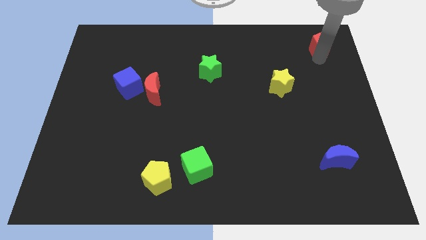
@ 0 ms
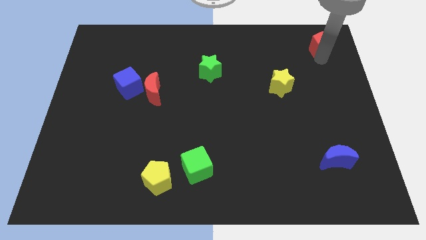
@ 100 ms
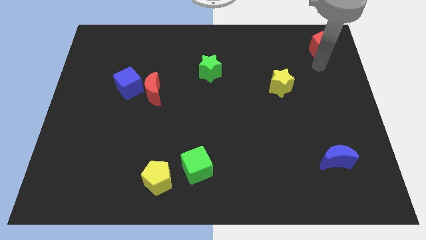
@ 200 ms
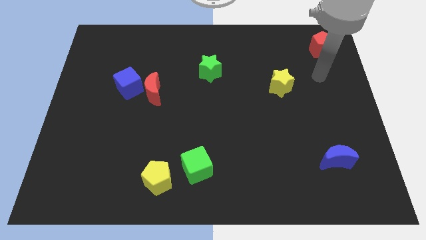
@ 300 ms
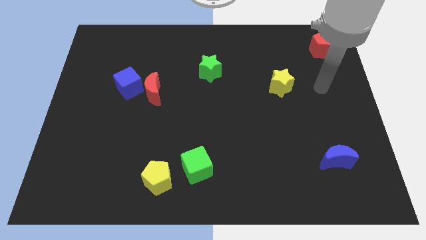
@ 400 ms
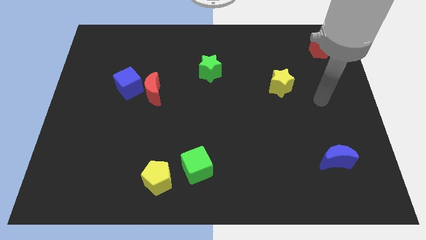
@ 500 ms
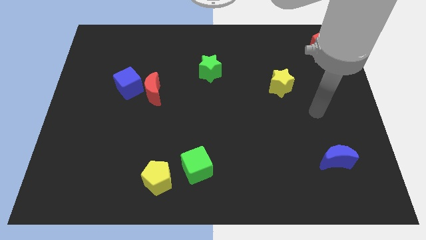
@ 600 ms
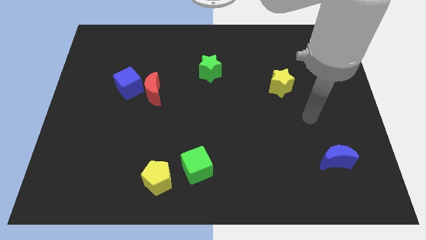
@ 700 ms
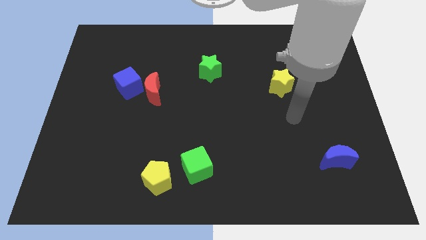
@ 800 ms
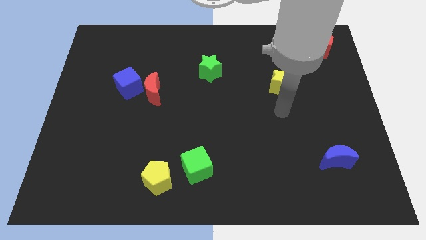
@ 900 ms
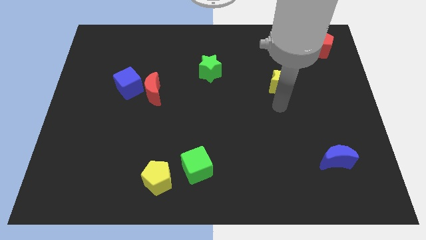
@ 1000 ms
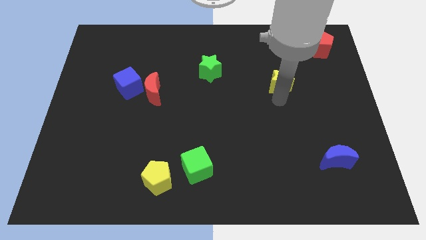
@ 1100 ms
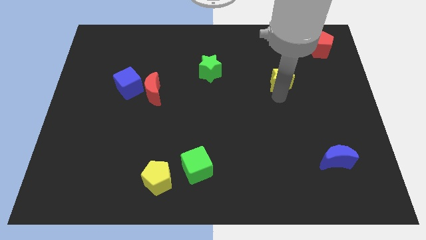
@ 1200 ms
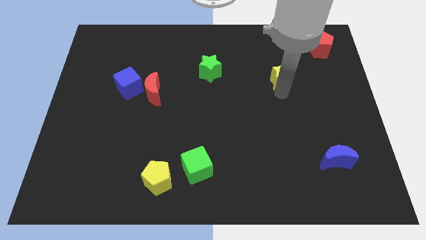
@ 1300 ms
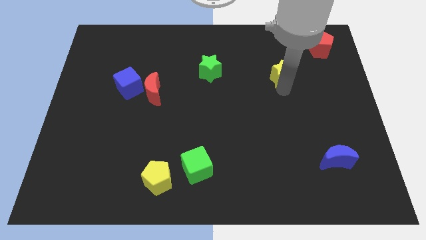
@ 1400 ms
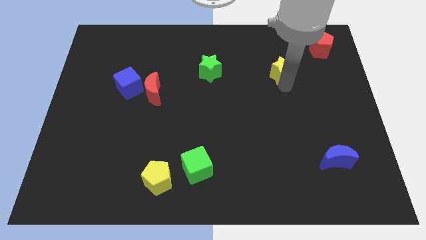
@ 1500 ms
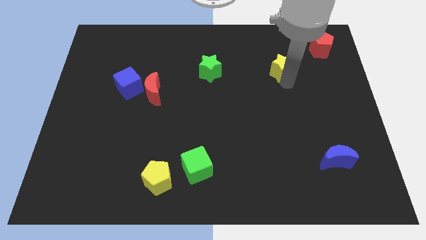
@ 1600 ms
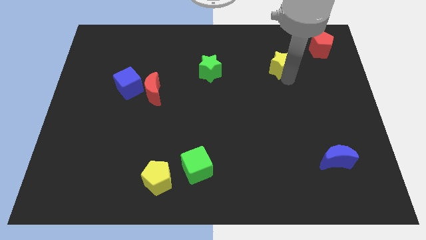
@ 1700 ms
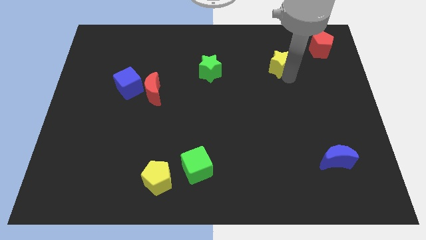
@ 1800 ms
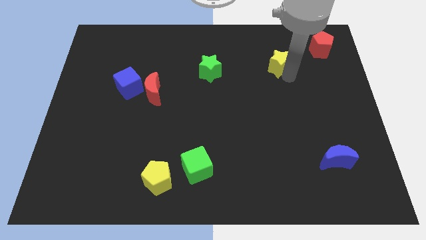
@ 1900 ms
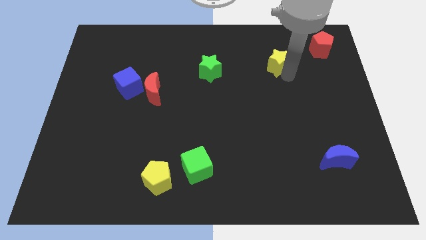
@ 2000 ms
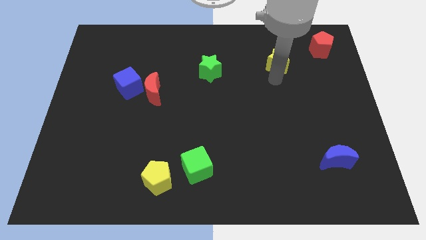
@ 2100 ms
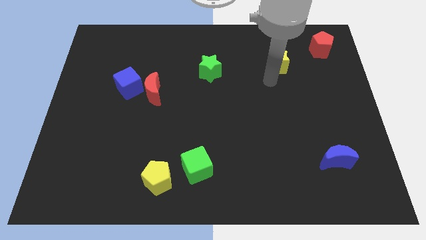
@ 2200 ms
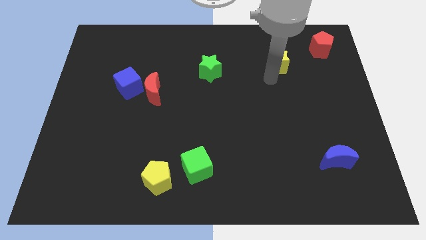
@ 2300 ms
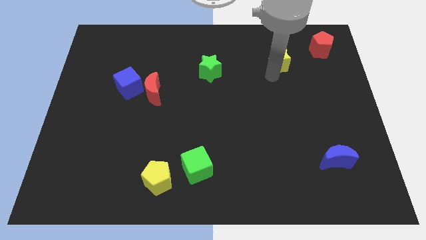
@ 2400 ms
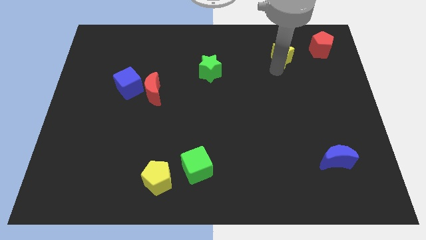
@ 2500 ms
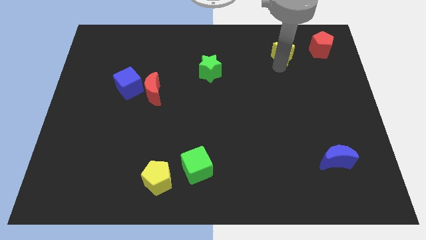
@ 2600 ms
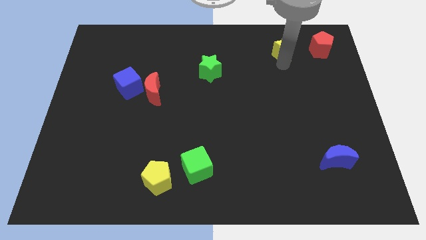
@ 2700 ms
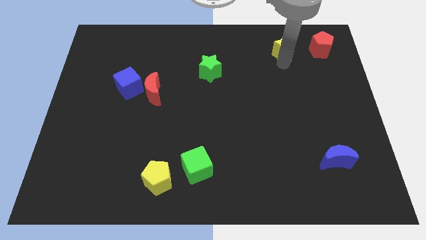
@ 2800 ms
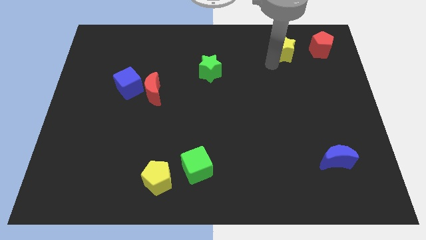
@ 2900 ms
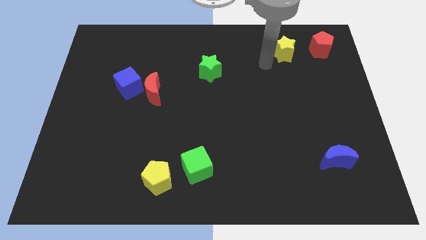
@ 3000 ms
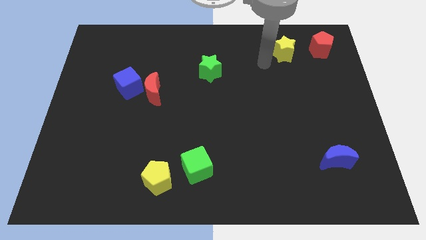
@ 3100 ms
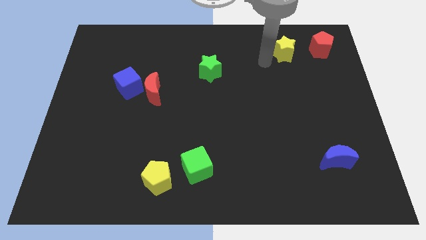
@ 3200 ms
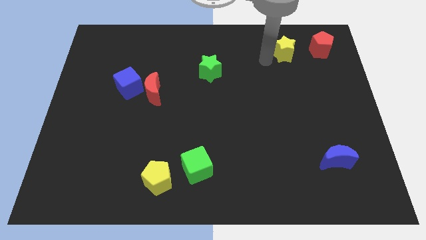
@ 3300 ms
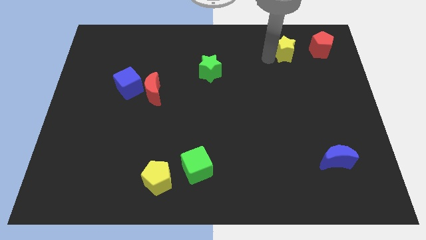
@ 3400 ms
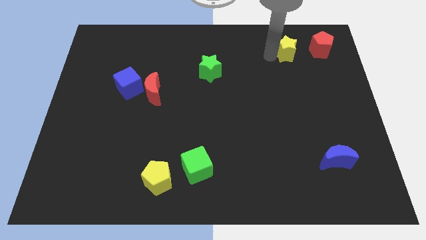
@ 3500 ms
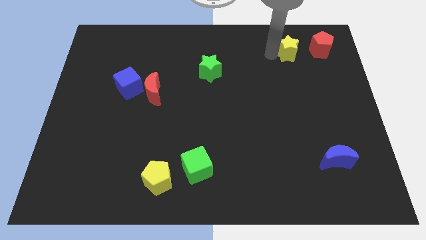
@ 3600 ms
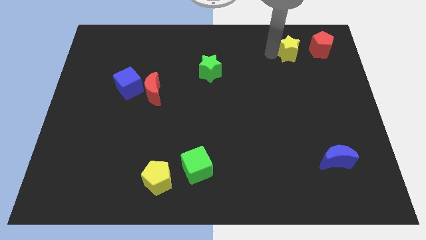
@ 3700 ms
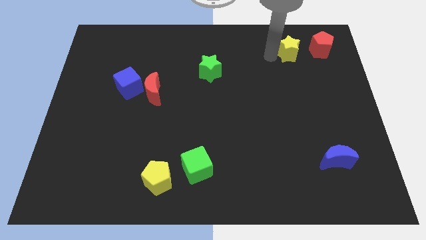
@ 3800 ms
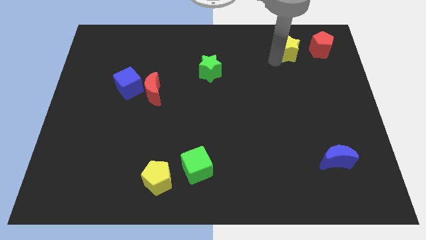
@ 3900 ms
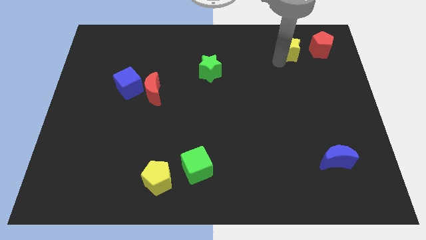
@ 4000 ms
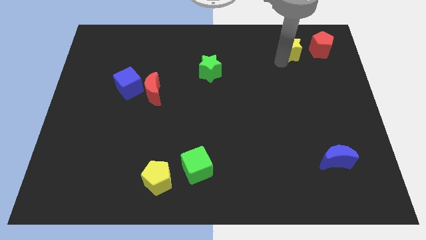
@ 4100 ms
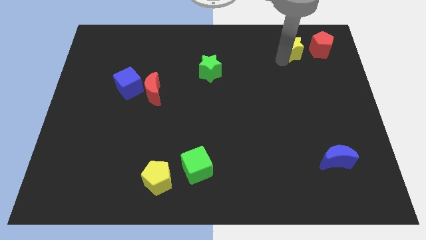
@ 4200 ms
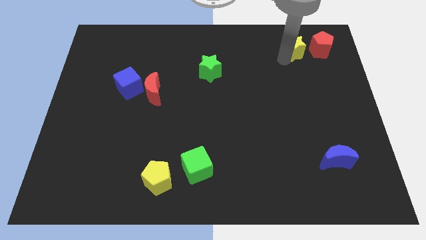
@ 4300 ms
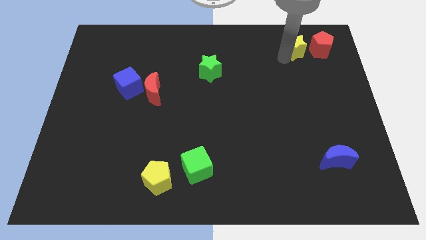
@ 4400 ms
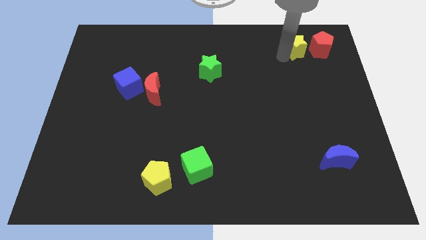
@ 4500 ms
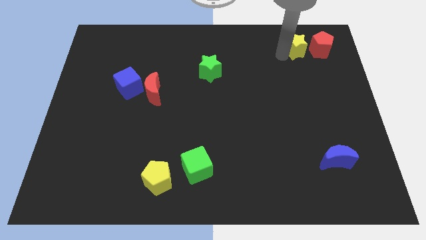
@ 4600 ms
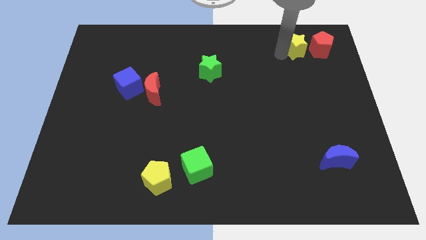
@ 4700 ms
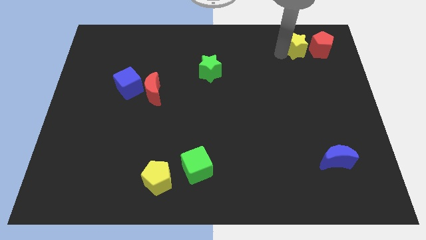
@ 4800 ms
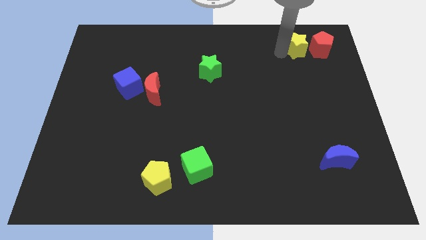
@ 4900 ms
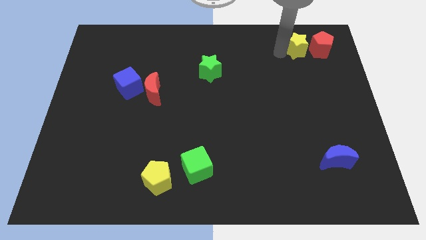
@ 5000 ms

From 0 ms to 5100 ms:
bring the yellow star close to the left side of the red pentagon

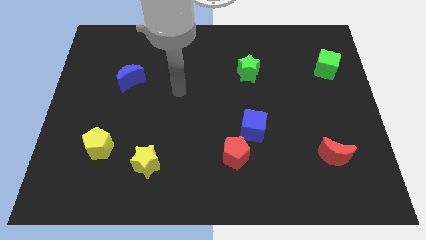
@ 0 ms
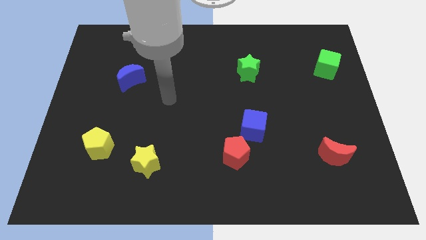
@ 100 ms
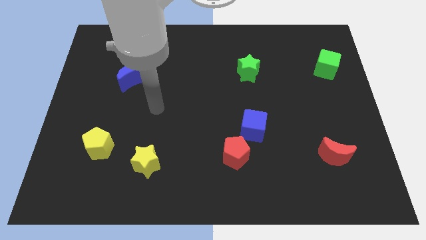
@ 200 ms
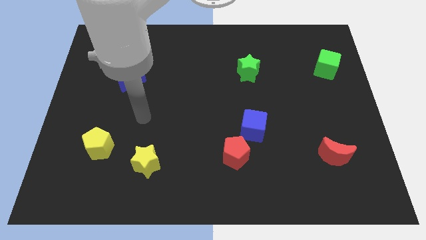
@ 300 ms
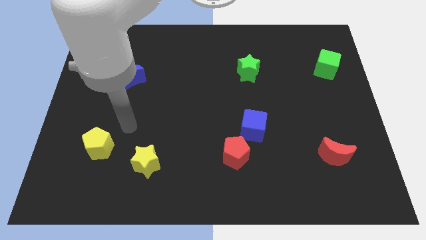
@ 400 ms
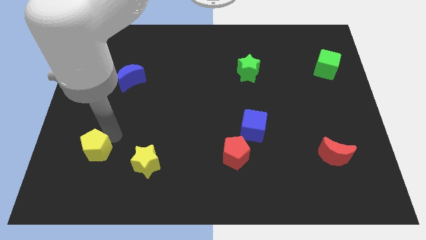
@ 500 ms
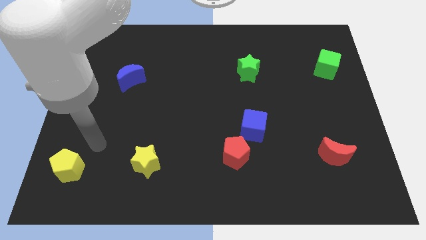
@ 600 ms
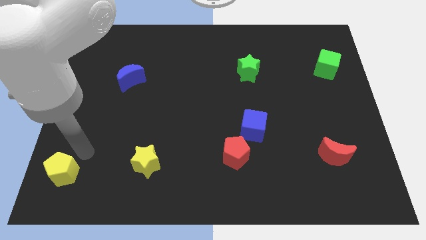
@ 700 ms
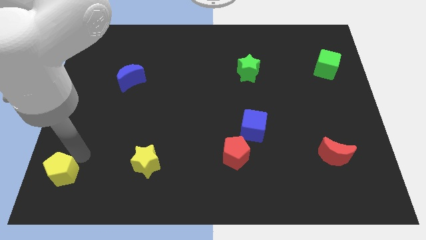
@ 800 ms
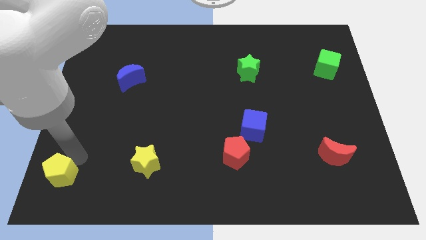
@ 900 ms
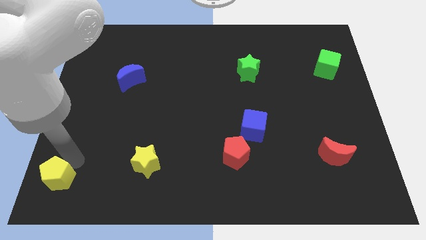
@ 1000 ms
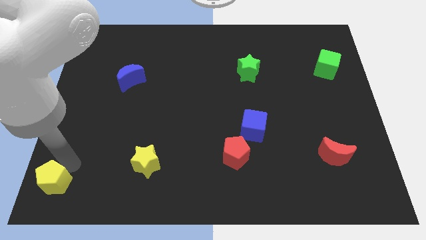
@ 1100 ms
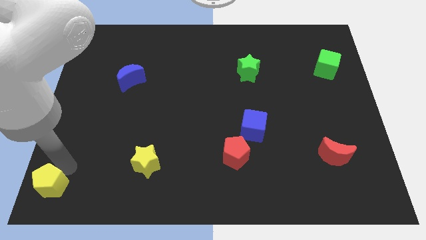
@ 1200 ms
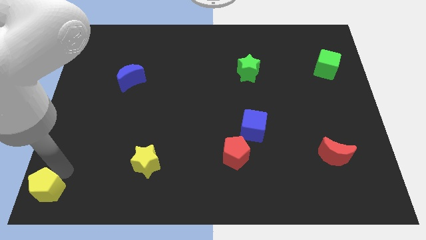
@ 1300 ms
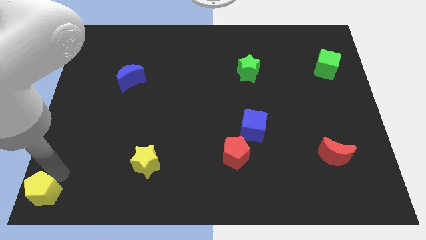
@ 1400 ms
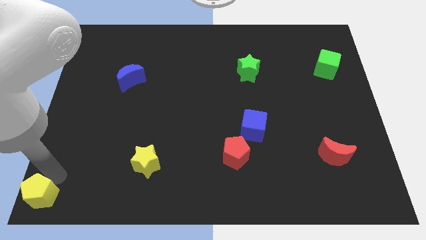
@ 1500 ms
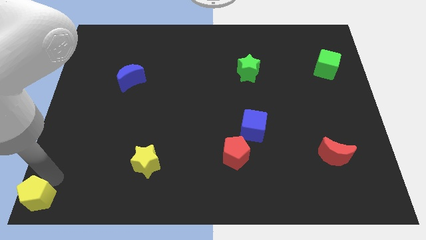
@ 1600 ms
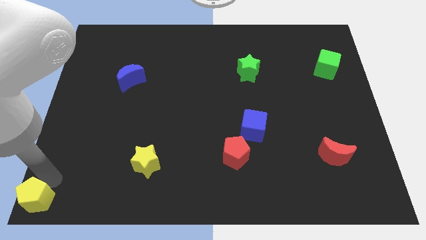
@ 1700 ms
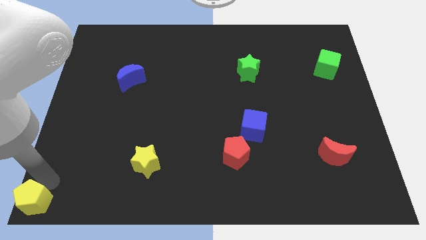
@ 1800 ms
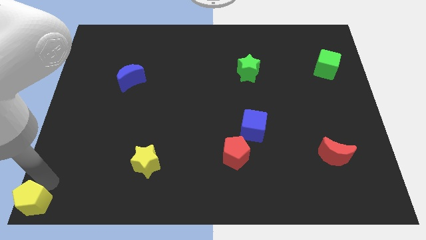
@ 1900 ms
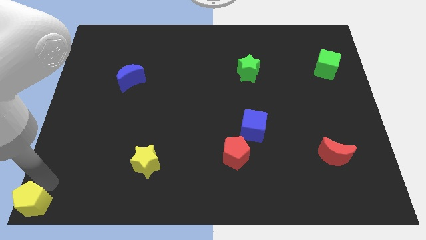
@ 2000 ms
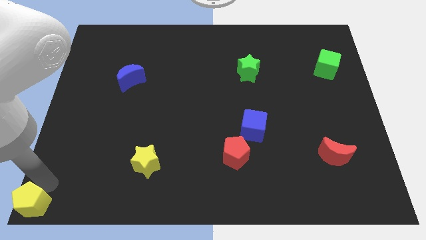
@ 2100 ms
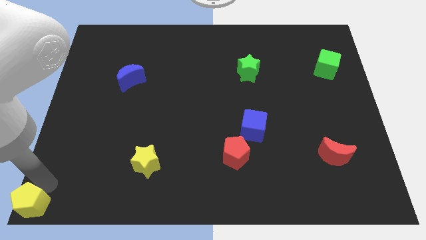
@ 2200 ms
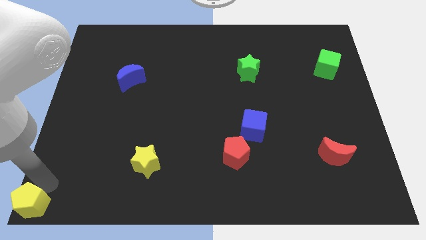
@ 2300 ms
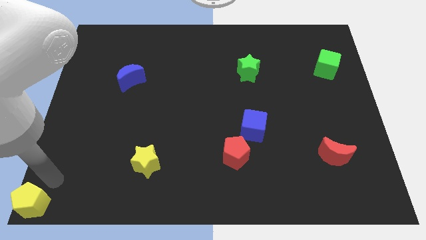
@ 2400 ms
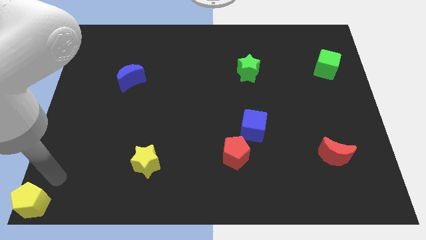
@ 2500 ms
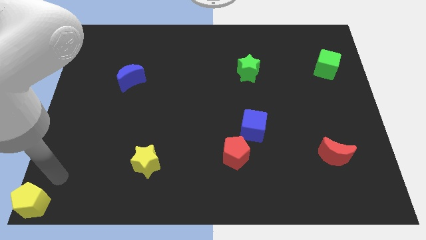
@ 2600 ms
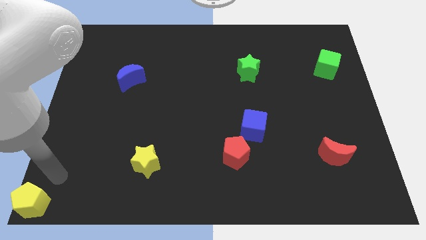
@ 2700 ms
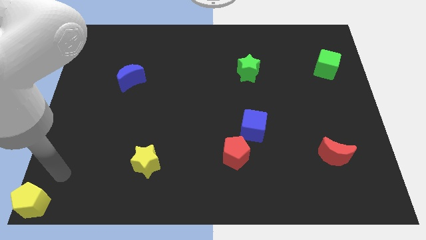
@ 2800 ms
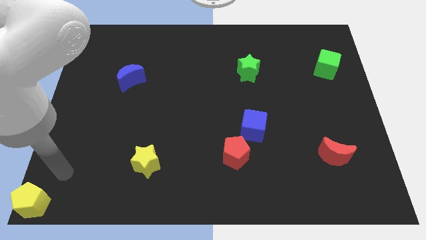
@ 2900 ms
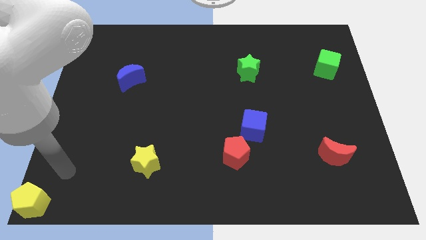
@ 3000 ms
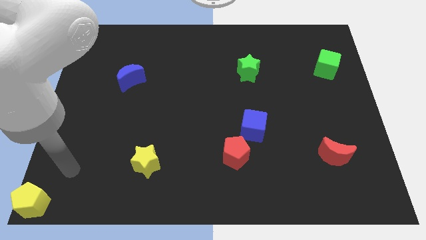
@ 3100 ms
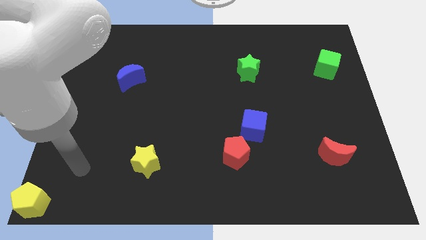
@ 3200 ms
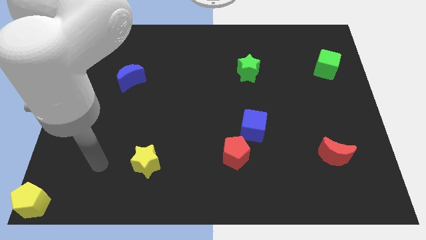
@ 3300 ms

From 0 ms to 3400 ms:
place the yellow pentagon diagonally to yellow star

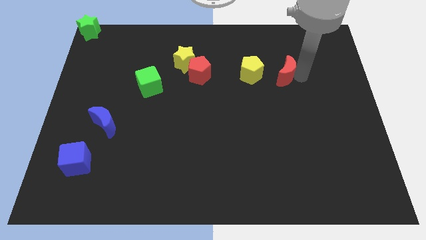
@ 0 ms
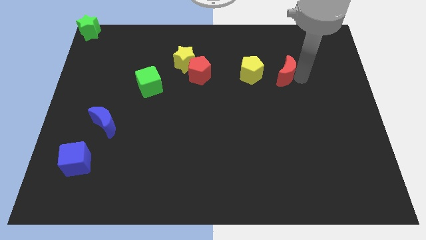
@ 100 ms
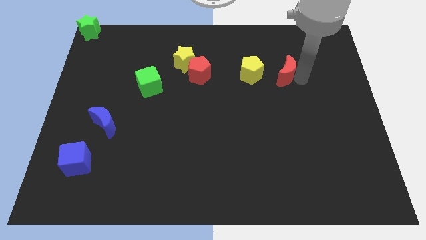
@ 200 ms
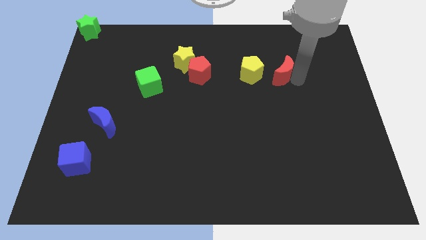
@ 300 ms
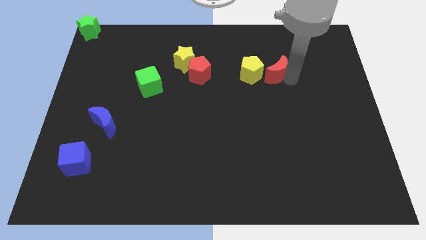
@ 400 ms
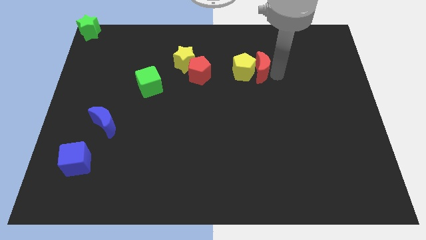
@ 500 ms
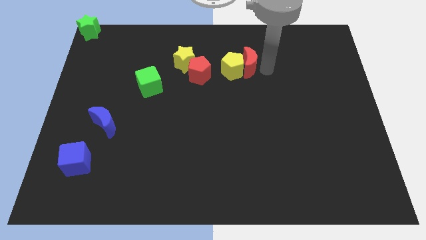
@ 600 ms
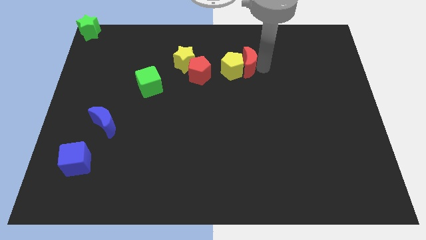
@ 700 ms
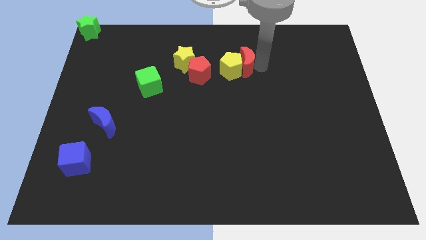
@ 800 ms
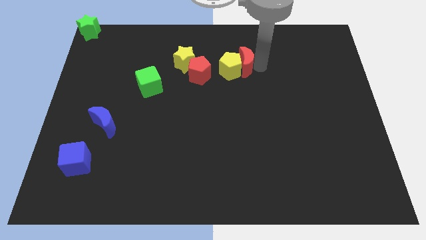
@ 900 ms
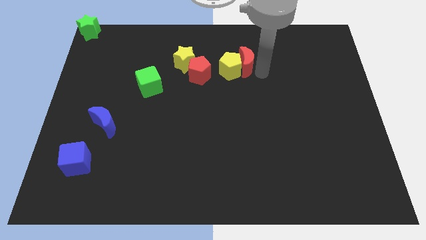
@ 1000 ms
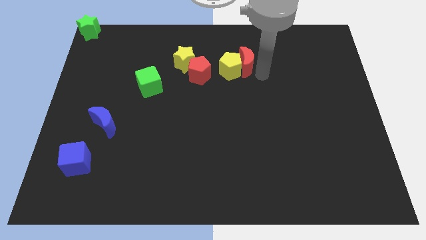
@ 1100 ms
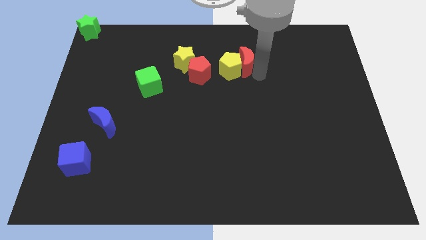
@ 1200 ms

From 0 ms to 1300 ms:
push the red moon into the yellow pentagon
